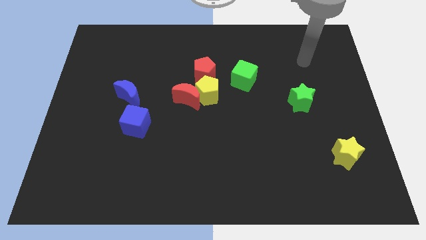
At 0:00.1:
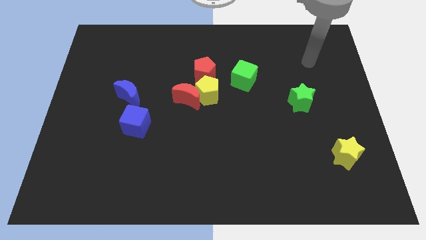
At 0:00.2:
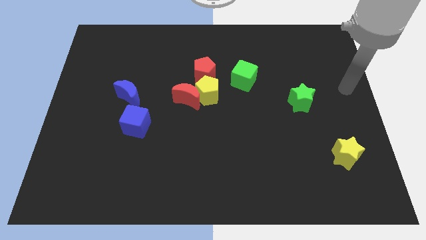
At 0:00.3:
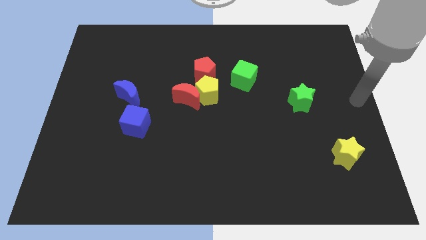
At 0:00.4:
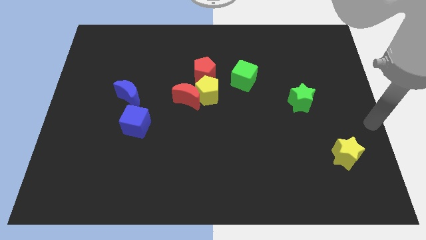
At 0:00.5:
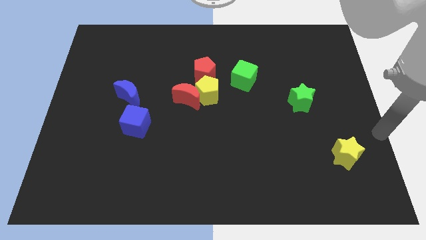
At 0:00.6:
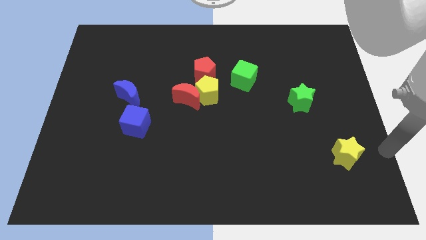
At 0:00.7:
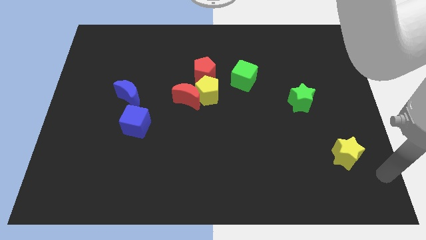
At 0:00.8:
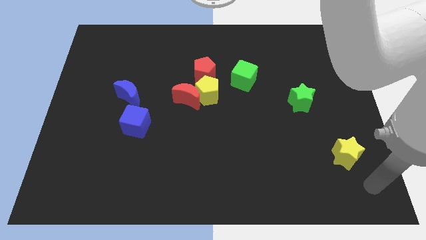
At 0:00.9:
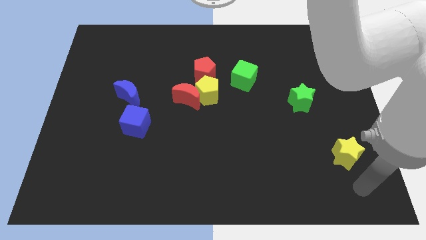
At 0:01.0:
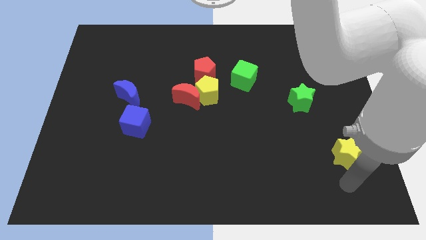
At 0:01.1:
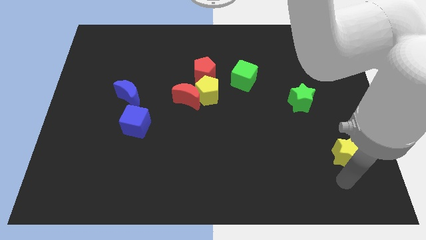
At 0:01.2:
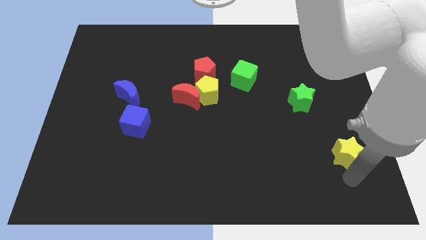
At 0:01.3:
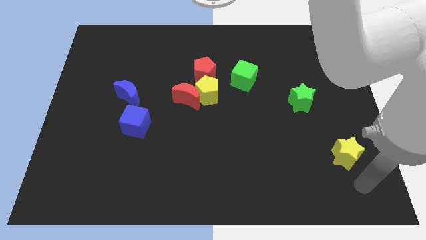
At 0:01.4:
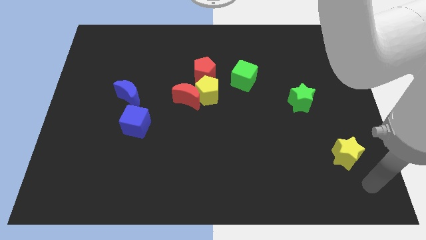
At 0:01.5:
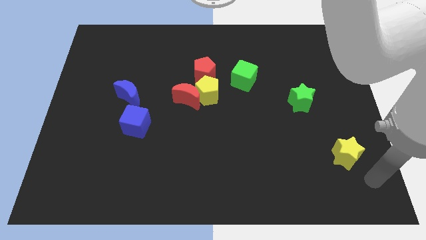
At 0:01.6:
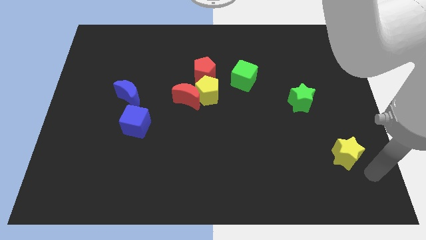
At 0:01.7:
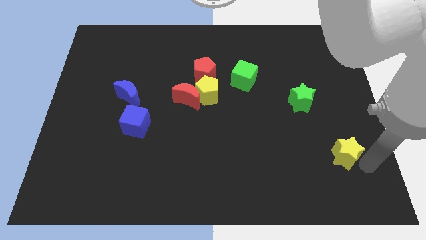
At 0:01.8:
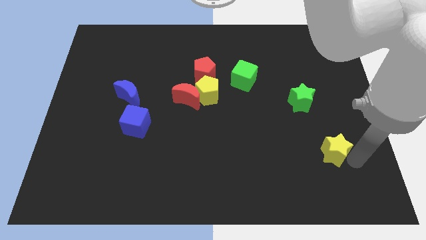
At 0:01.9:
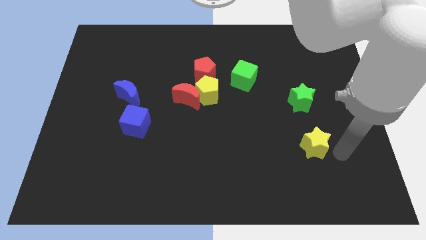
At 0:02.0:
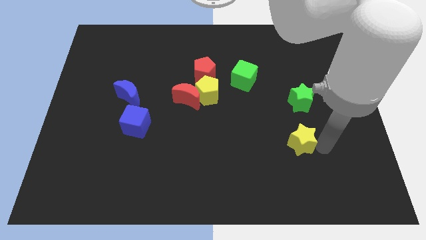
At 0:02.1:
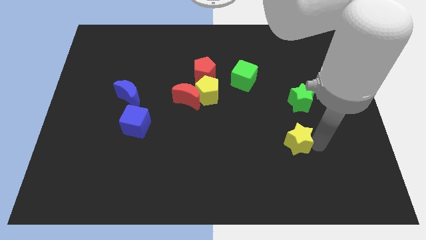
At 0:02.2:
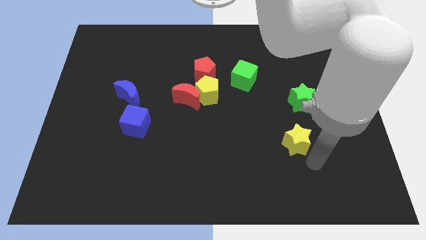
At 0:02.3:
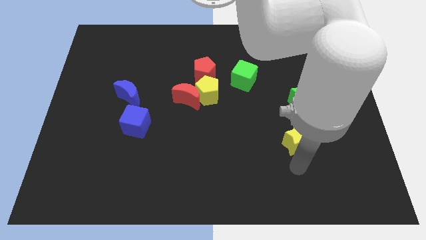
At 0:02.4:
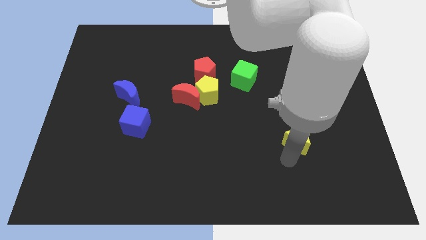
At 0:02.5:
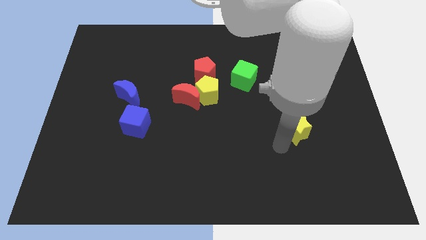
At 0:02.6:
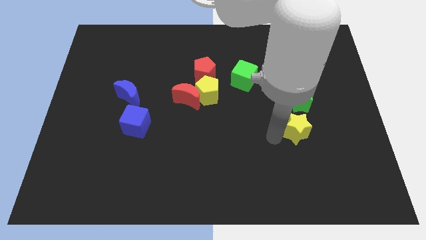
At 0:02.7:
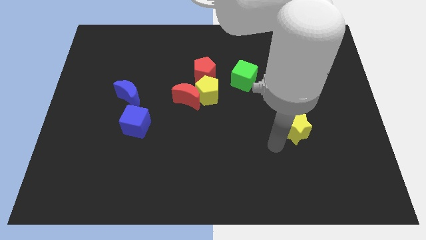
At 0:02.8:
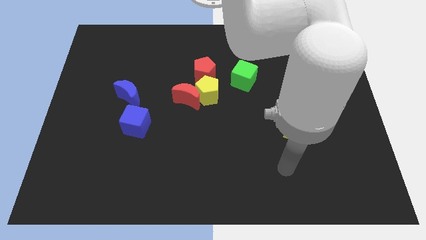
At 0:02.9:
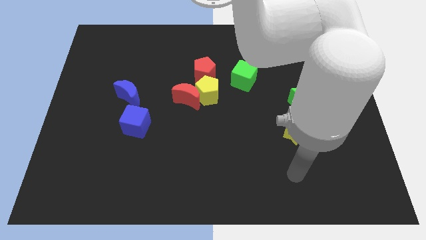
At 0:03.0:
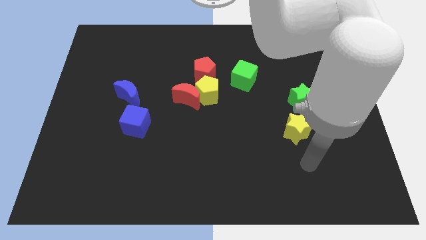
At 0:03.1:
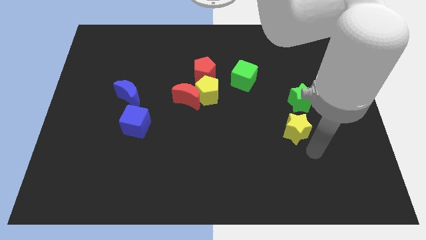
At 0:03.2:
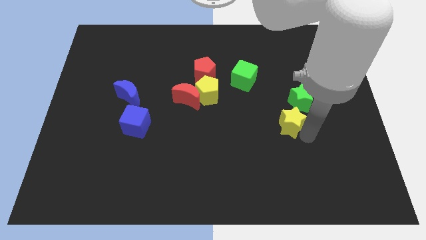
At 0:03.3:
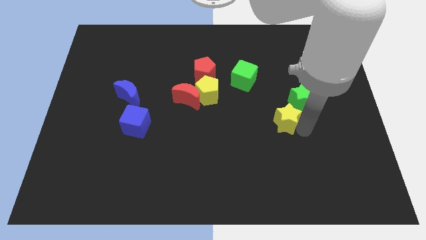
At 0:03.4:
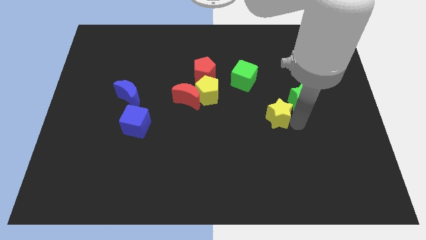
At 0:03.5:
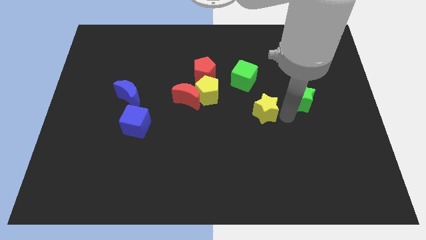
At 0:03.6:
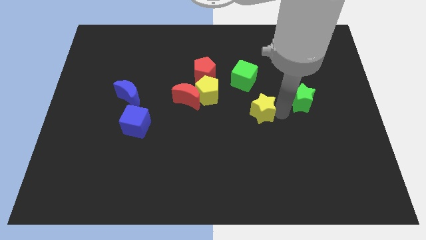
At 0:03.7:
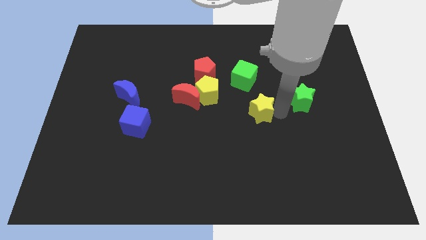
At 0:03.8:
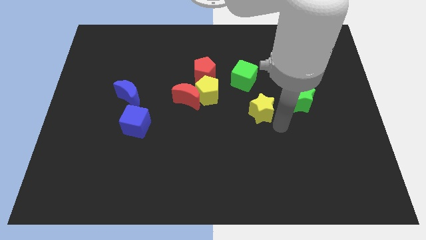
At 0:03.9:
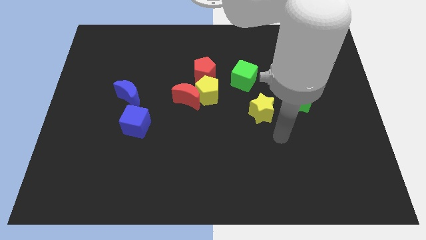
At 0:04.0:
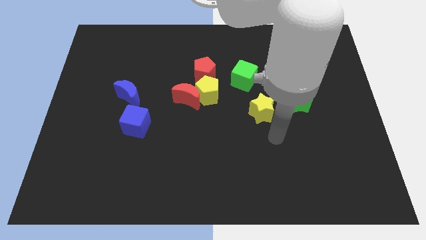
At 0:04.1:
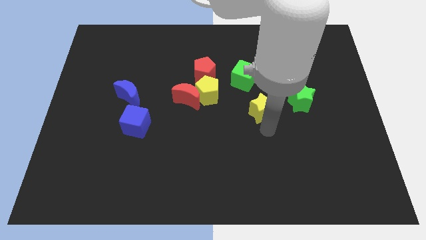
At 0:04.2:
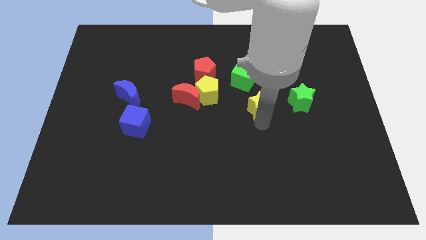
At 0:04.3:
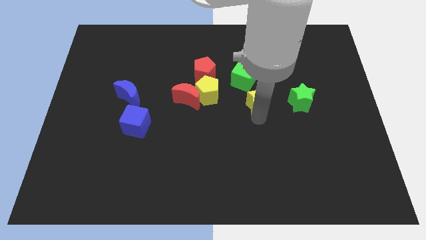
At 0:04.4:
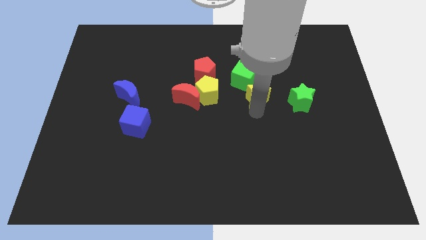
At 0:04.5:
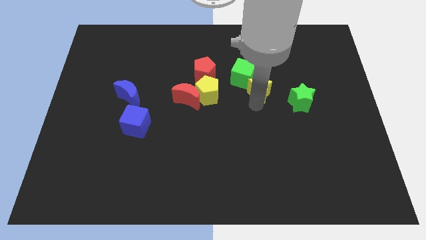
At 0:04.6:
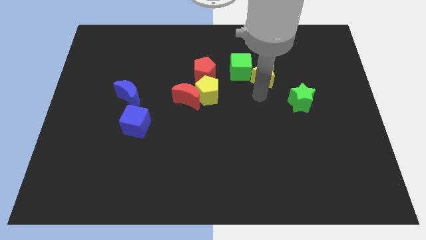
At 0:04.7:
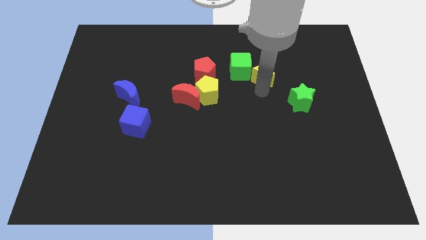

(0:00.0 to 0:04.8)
move the yellow star to the green cube

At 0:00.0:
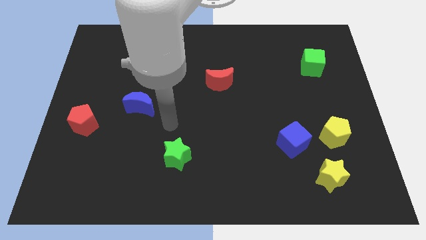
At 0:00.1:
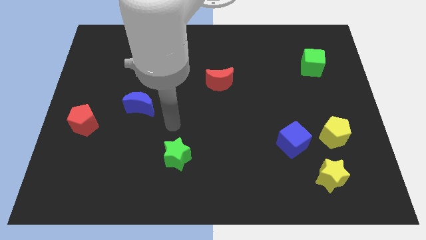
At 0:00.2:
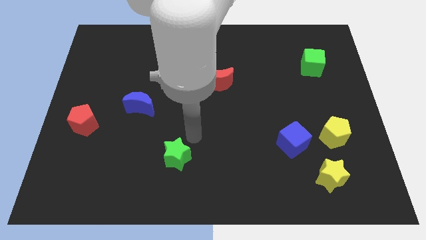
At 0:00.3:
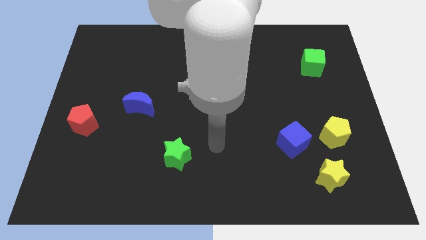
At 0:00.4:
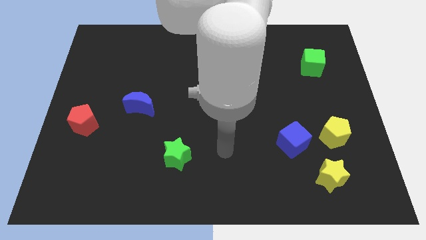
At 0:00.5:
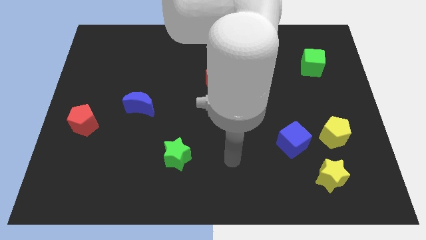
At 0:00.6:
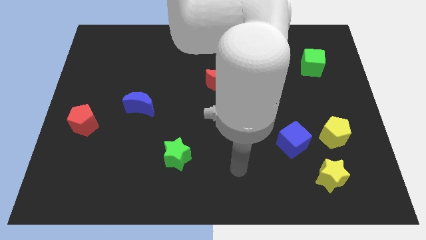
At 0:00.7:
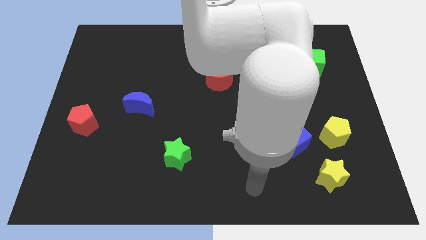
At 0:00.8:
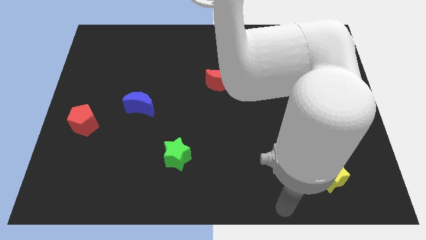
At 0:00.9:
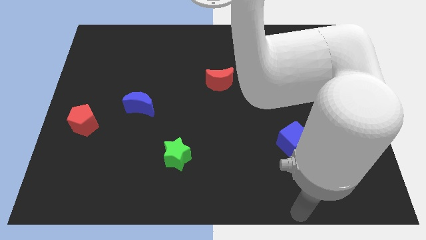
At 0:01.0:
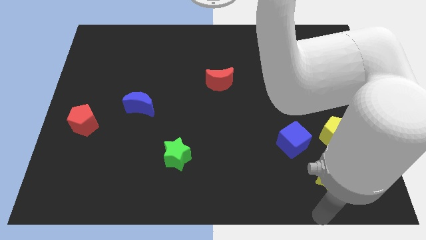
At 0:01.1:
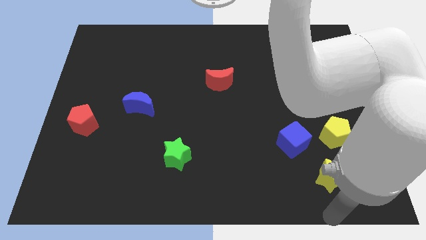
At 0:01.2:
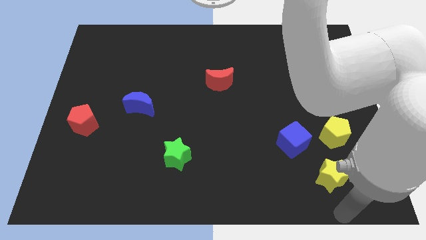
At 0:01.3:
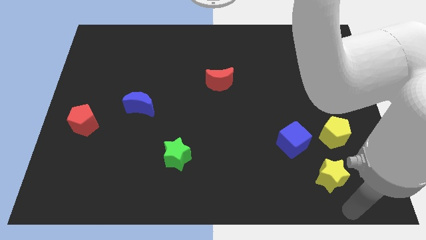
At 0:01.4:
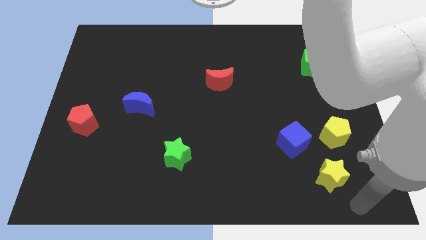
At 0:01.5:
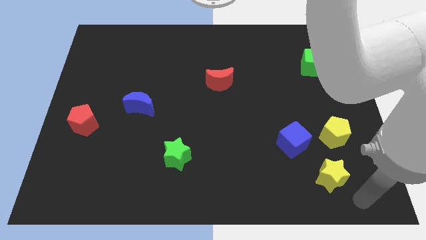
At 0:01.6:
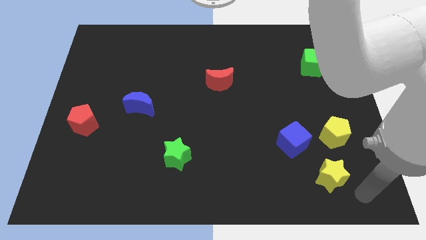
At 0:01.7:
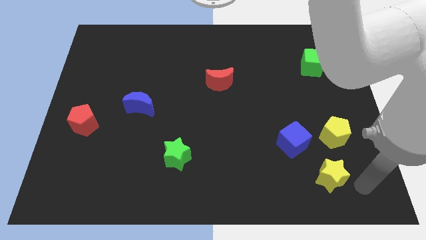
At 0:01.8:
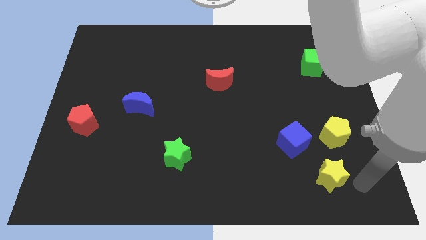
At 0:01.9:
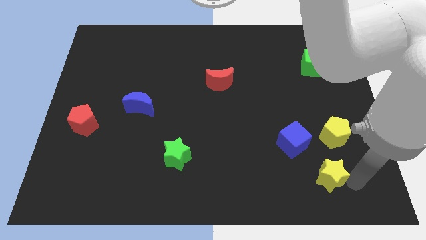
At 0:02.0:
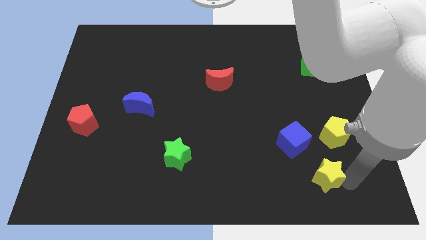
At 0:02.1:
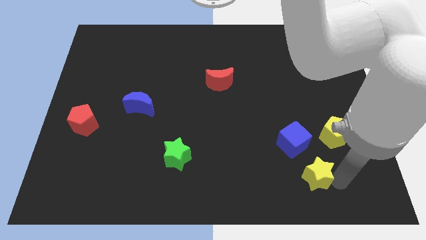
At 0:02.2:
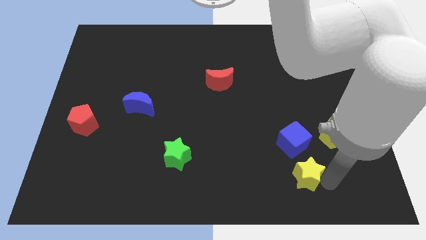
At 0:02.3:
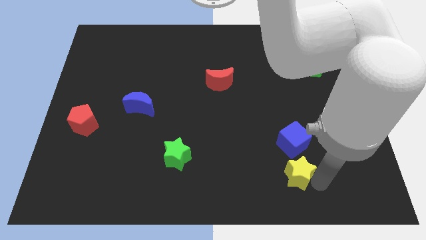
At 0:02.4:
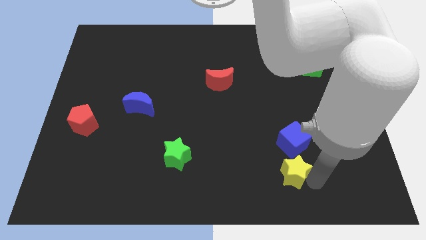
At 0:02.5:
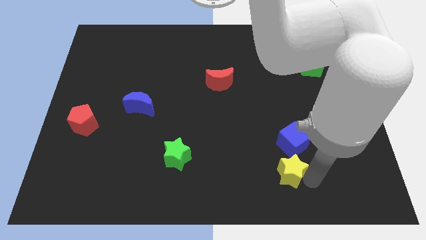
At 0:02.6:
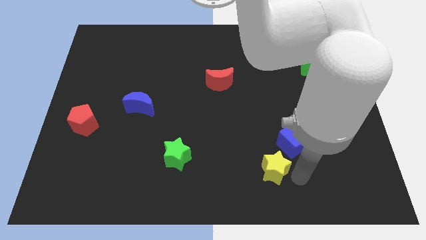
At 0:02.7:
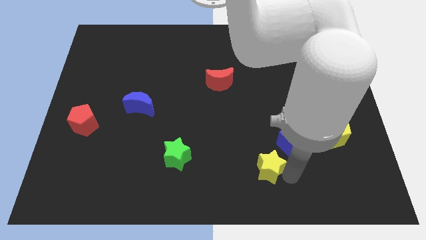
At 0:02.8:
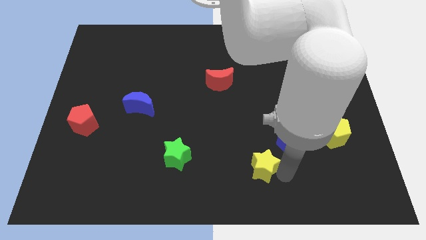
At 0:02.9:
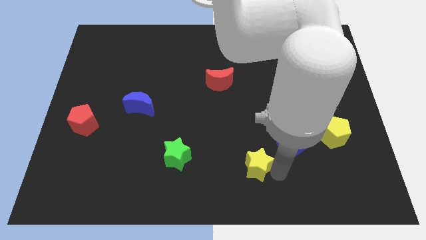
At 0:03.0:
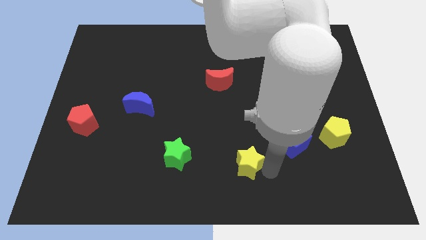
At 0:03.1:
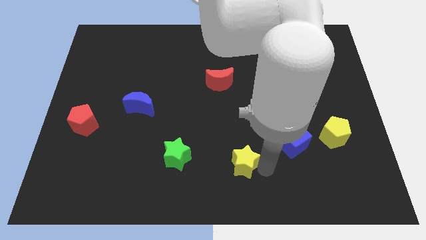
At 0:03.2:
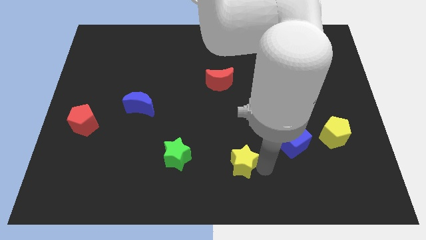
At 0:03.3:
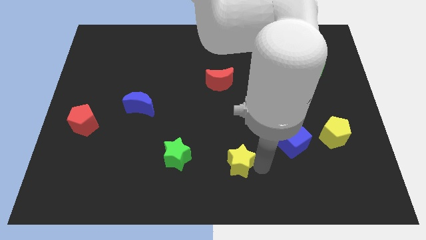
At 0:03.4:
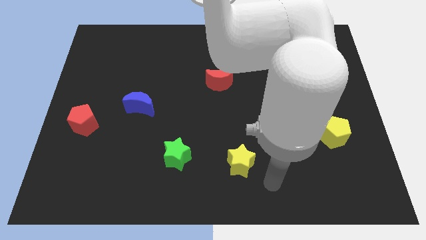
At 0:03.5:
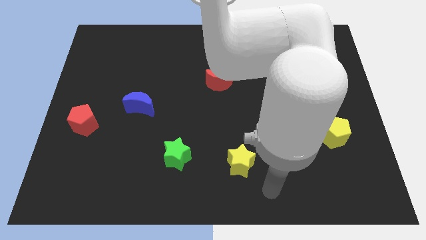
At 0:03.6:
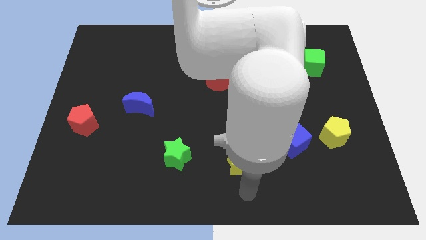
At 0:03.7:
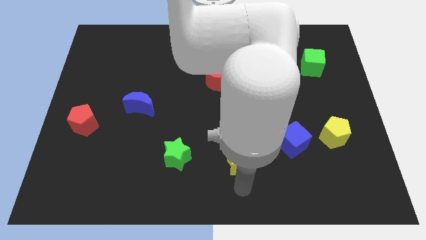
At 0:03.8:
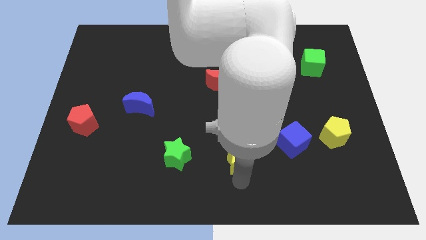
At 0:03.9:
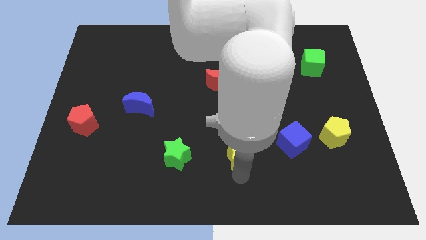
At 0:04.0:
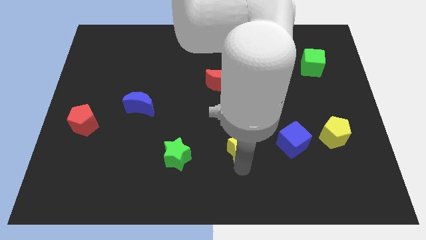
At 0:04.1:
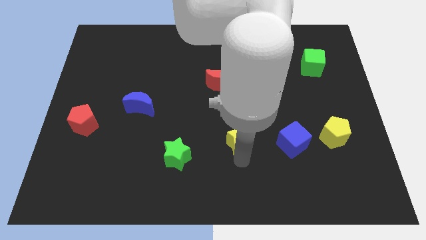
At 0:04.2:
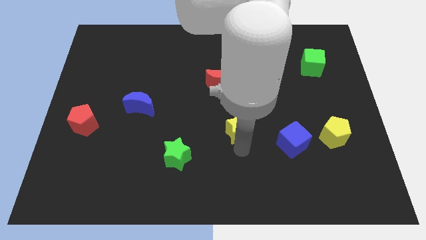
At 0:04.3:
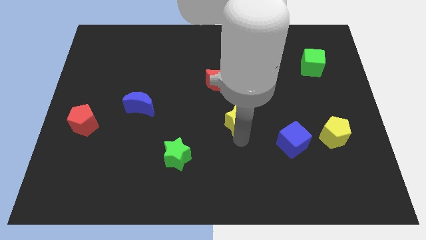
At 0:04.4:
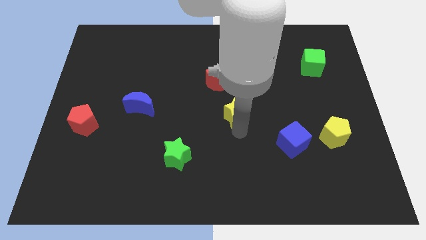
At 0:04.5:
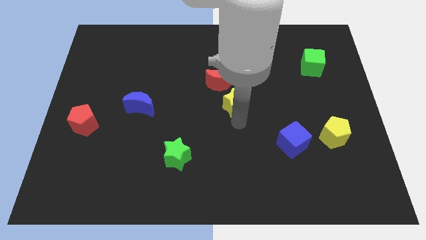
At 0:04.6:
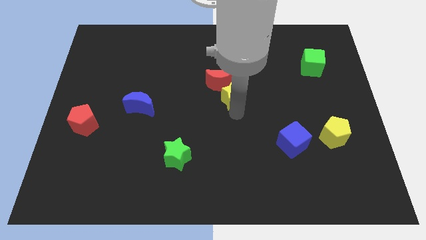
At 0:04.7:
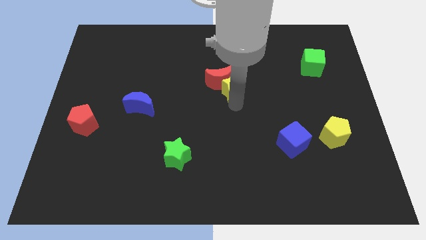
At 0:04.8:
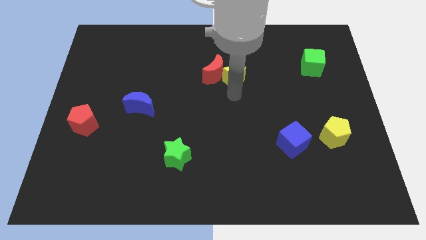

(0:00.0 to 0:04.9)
push the yellow star to the red moon
